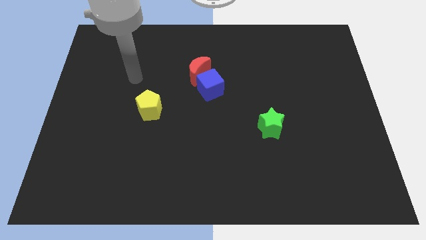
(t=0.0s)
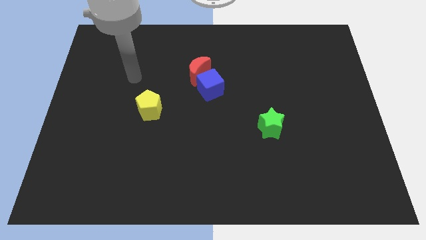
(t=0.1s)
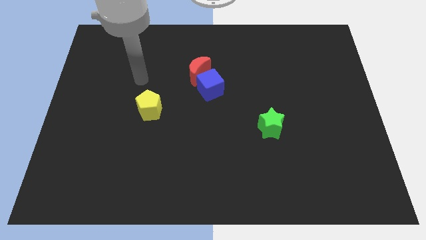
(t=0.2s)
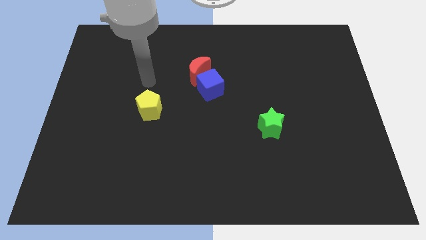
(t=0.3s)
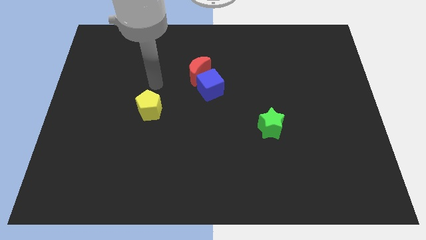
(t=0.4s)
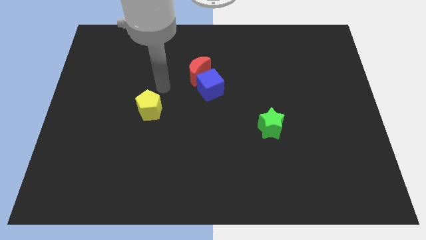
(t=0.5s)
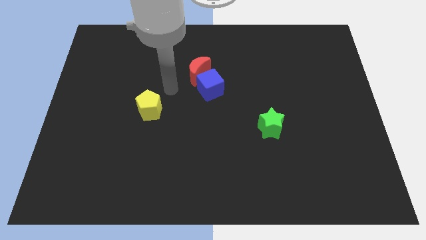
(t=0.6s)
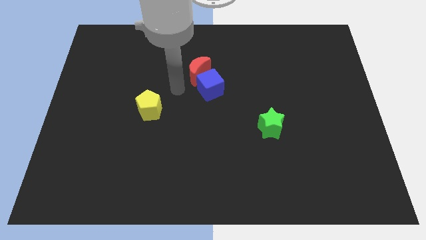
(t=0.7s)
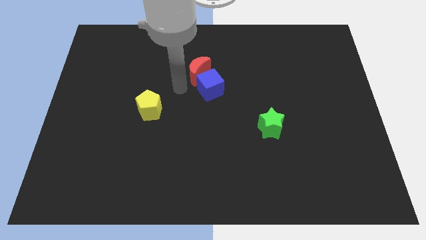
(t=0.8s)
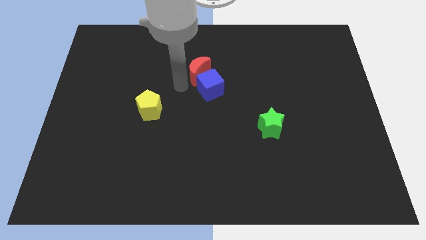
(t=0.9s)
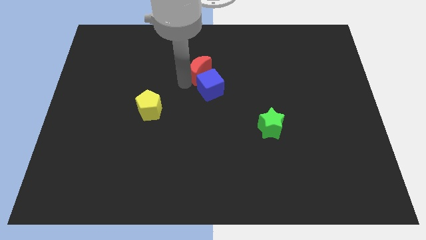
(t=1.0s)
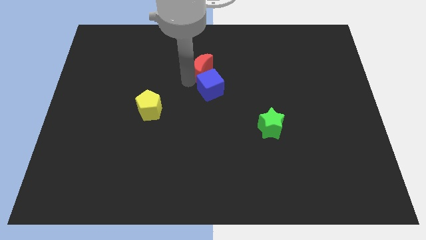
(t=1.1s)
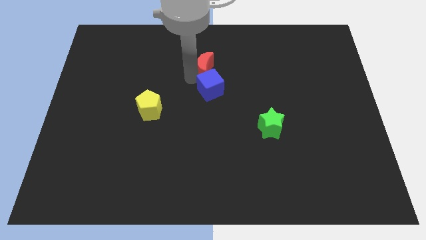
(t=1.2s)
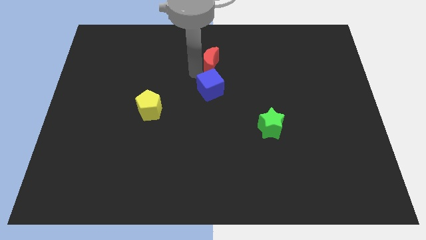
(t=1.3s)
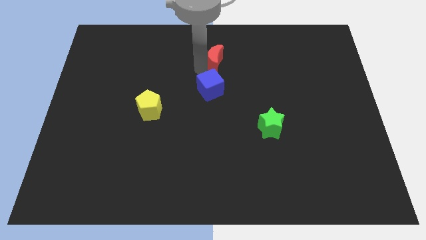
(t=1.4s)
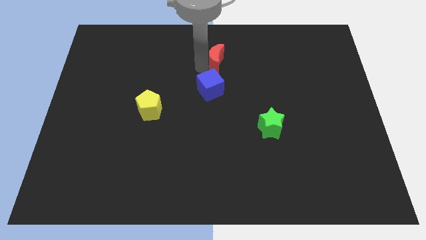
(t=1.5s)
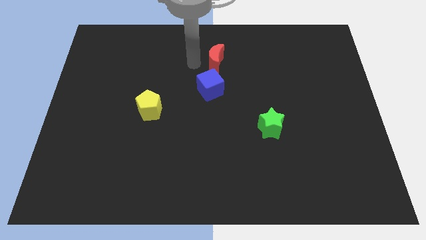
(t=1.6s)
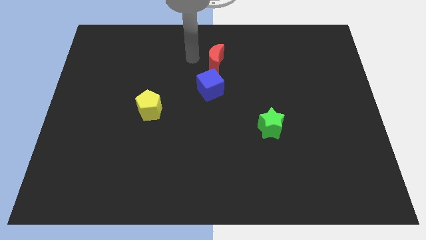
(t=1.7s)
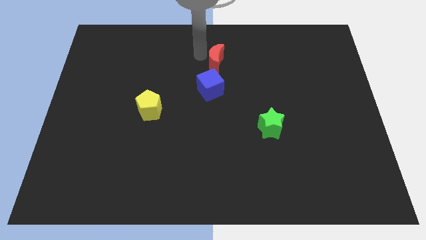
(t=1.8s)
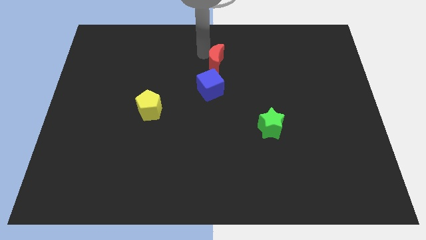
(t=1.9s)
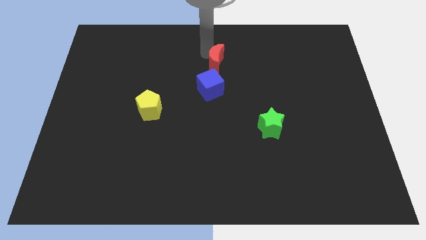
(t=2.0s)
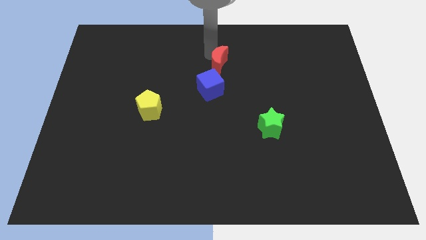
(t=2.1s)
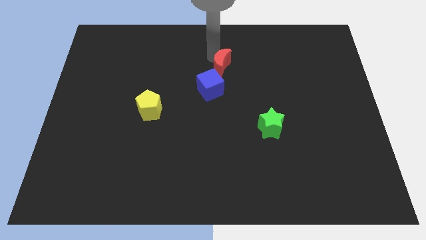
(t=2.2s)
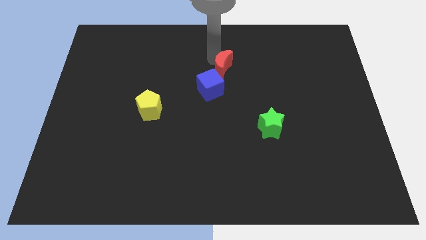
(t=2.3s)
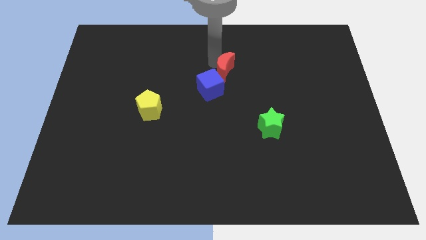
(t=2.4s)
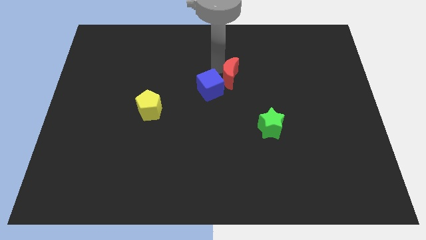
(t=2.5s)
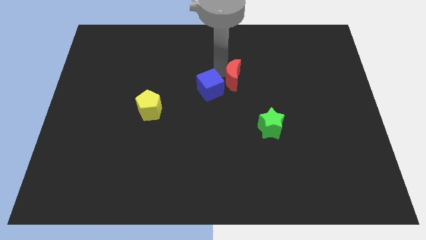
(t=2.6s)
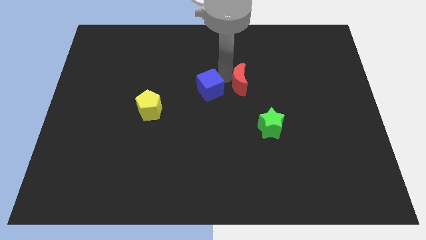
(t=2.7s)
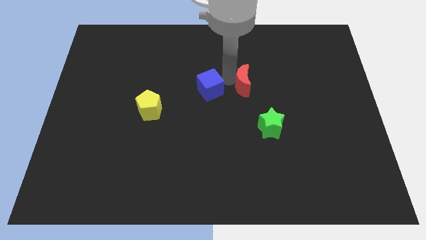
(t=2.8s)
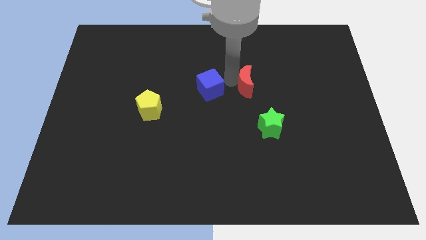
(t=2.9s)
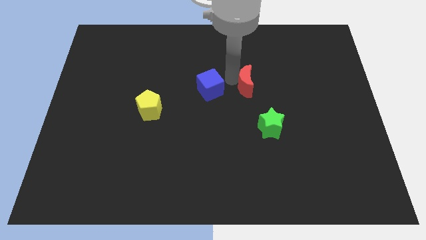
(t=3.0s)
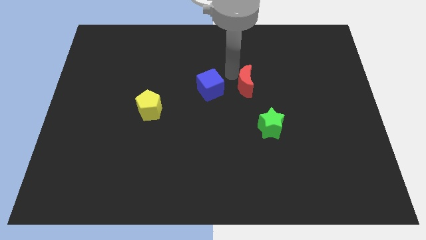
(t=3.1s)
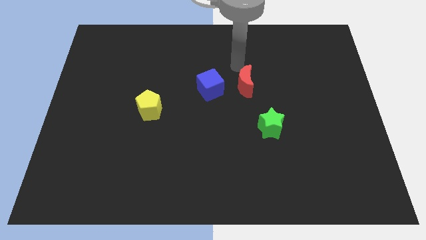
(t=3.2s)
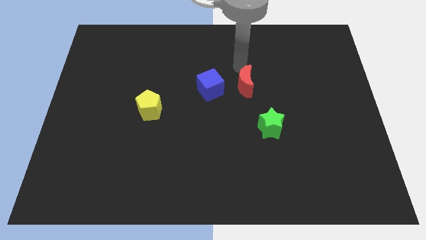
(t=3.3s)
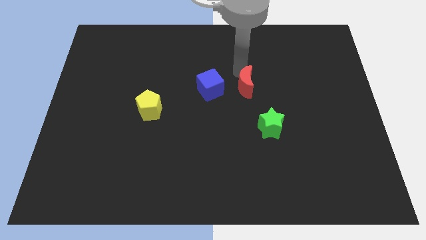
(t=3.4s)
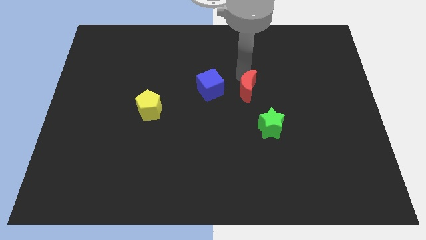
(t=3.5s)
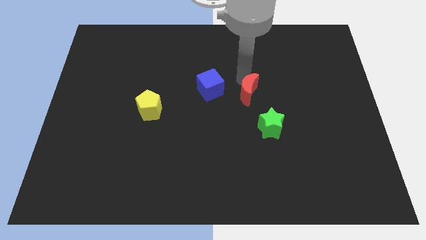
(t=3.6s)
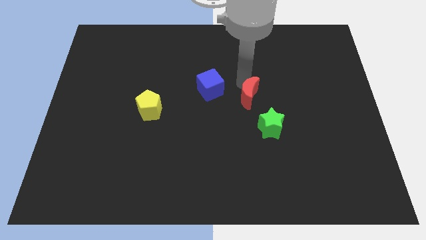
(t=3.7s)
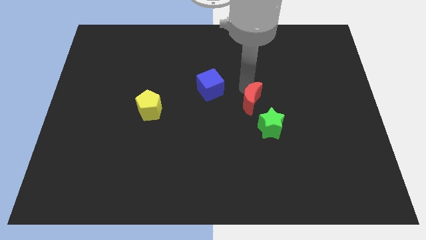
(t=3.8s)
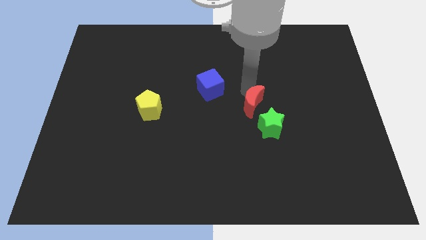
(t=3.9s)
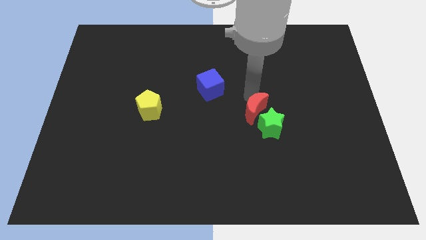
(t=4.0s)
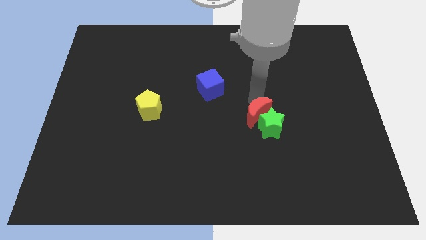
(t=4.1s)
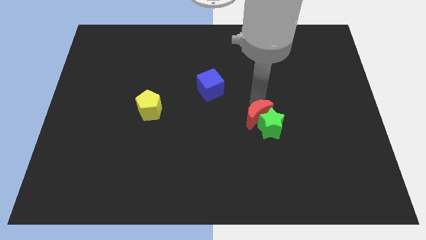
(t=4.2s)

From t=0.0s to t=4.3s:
push the moon close to the green star

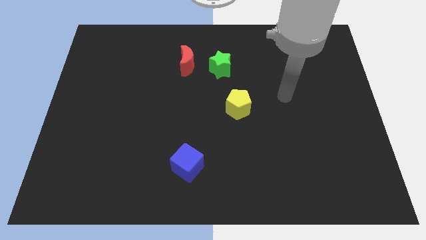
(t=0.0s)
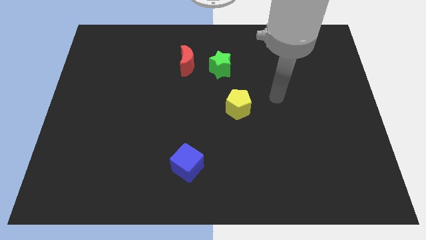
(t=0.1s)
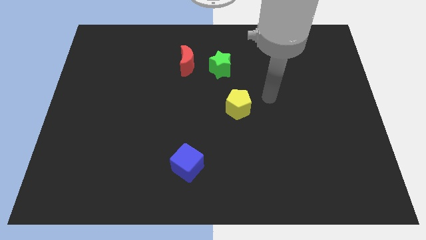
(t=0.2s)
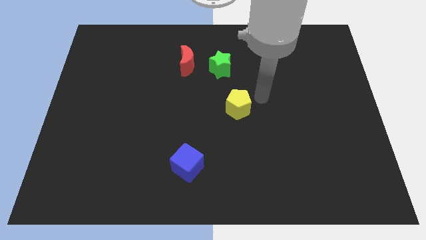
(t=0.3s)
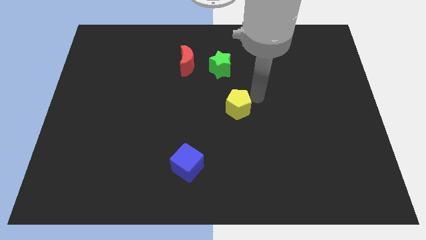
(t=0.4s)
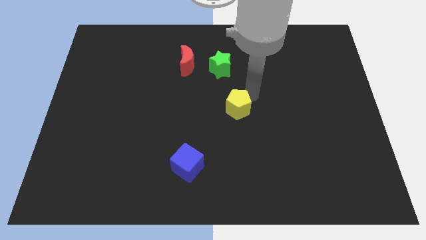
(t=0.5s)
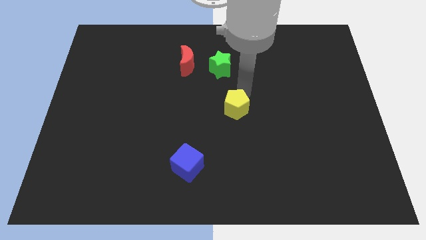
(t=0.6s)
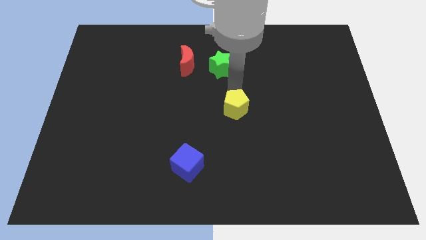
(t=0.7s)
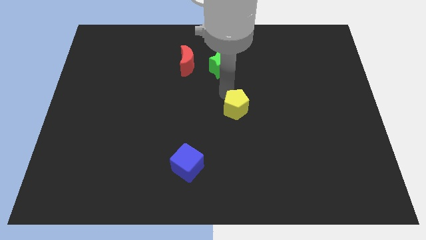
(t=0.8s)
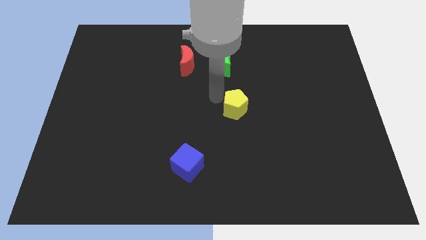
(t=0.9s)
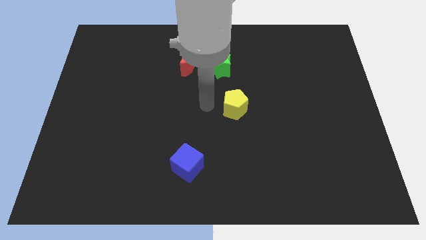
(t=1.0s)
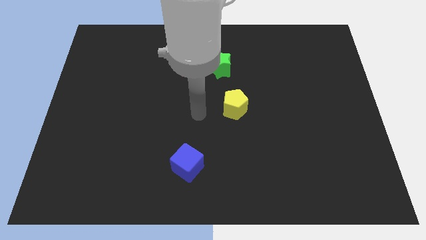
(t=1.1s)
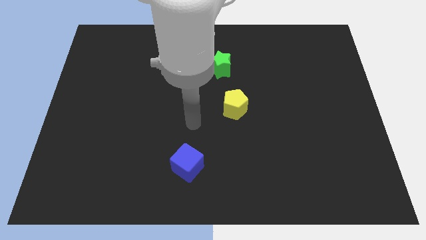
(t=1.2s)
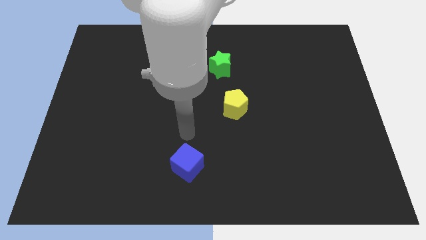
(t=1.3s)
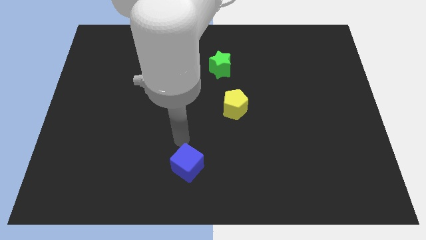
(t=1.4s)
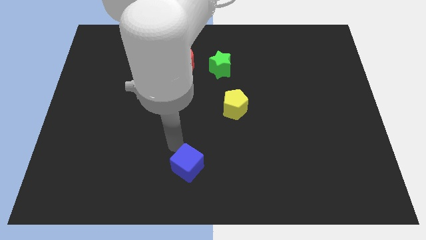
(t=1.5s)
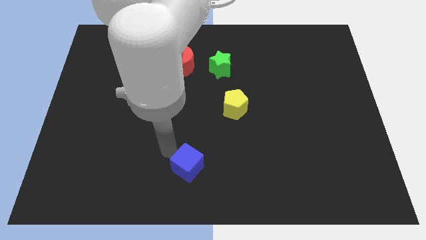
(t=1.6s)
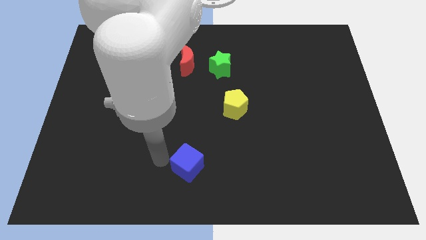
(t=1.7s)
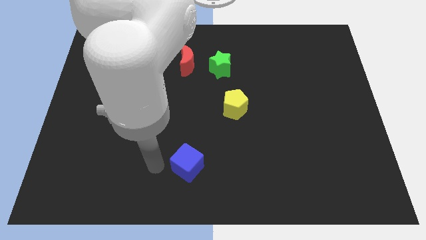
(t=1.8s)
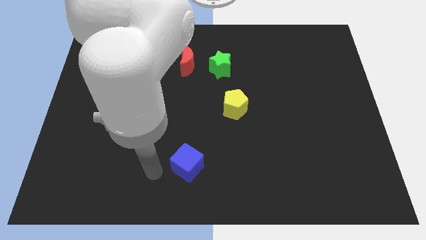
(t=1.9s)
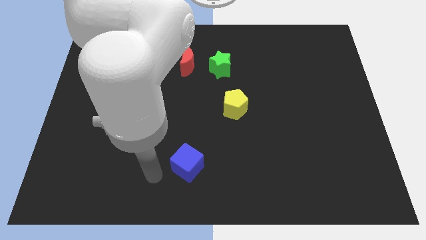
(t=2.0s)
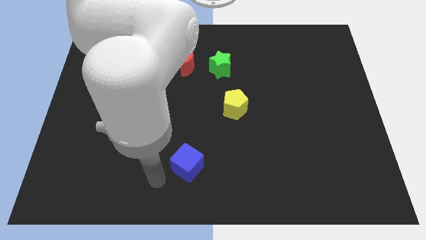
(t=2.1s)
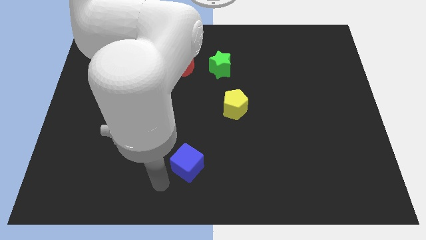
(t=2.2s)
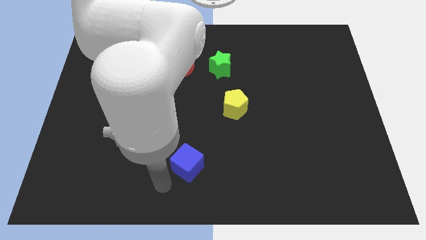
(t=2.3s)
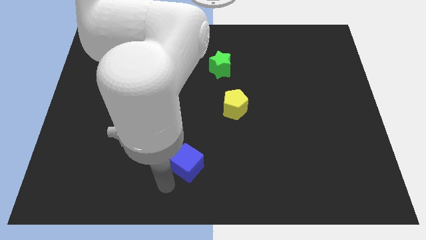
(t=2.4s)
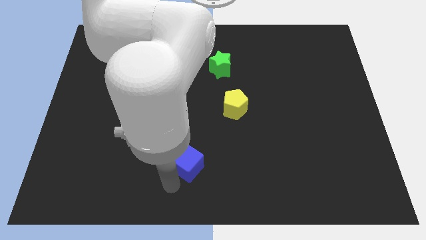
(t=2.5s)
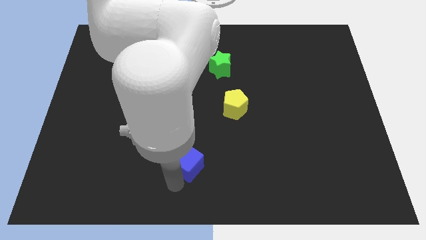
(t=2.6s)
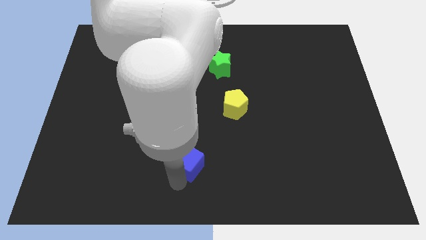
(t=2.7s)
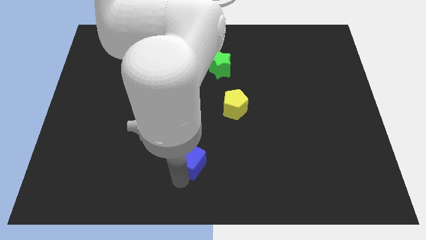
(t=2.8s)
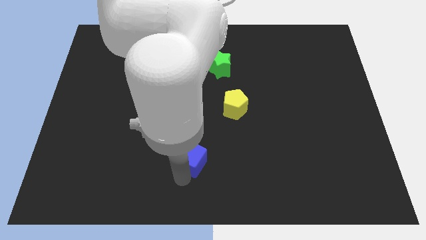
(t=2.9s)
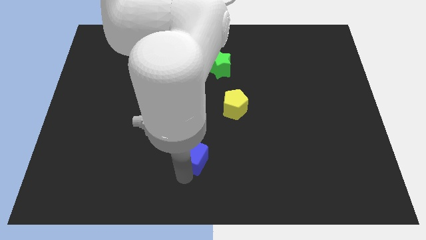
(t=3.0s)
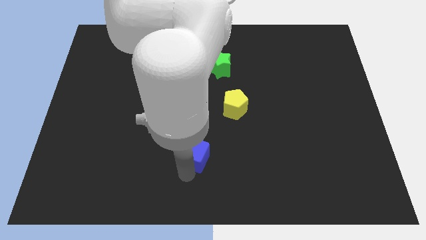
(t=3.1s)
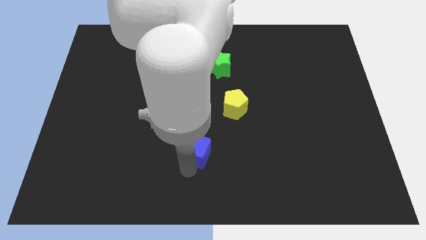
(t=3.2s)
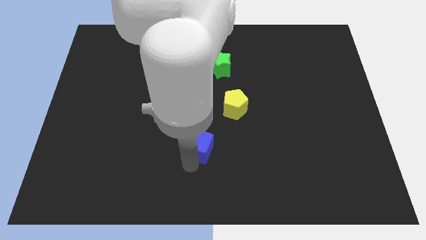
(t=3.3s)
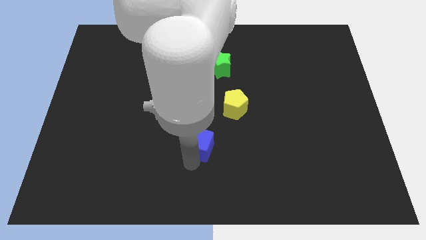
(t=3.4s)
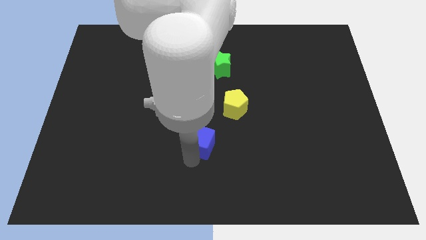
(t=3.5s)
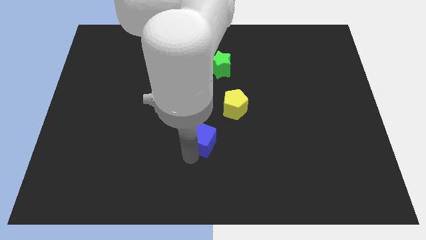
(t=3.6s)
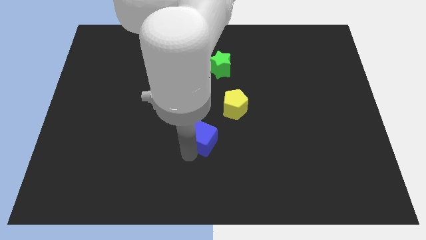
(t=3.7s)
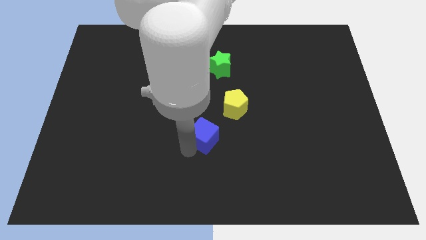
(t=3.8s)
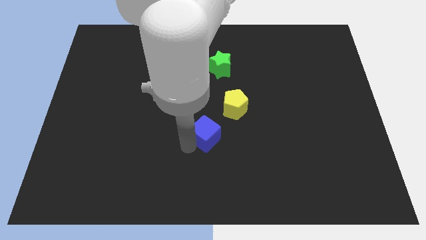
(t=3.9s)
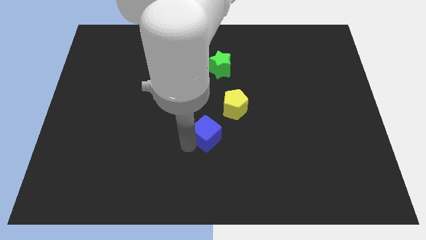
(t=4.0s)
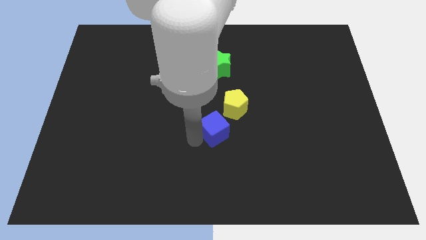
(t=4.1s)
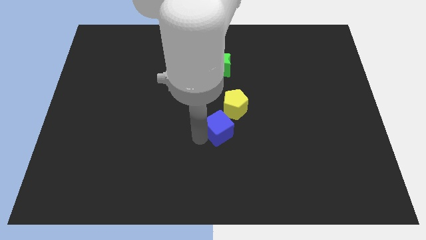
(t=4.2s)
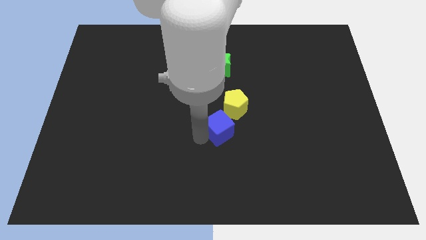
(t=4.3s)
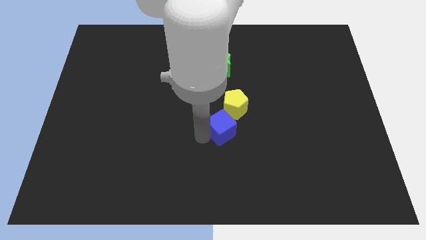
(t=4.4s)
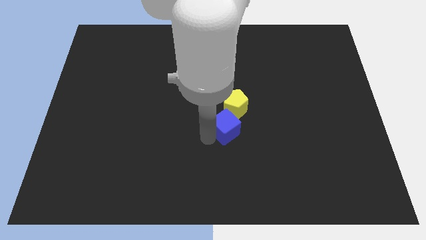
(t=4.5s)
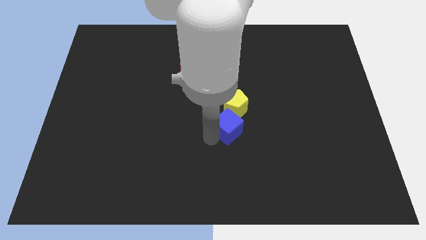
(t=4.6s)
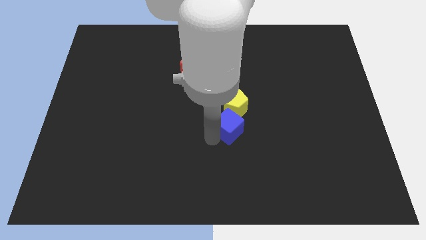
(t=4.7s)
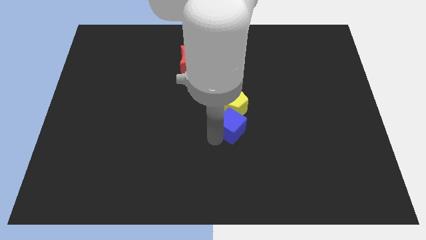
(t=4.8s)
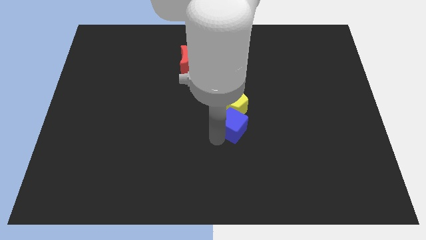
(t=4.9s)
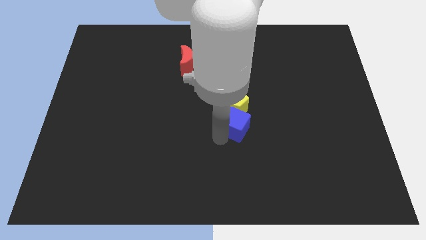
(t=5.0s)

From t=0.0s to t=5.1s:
push the blue block next to the yellow pentagon
